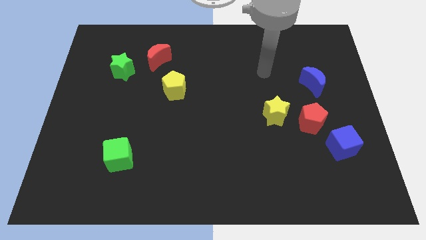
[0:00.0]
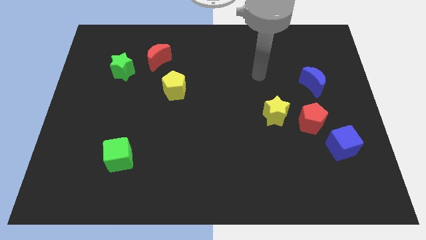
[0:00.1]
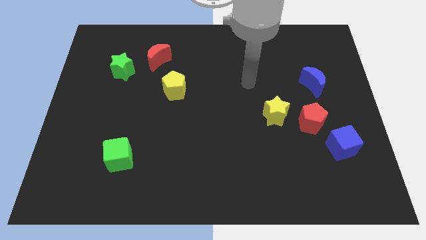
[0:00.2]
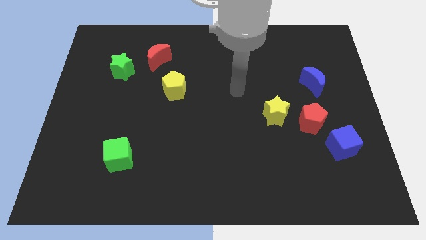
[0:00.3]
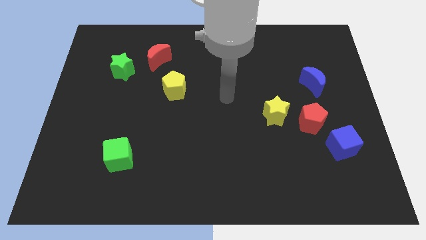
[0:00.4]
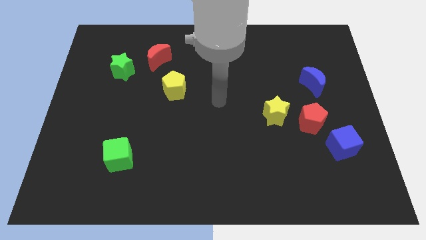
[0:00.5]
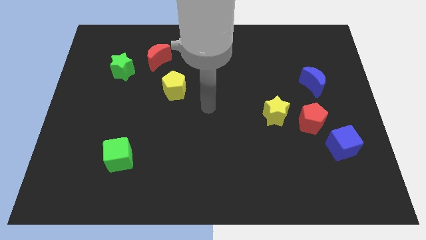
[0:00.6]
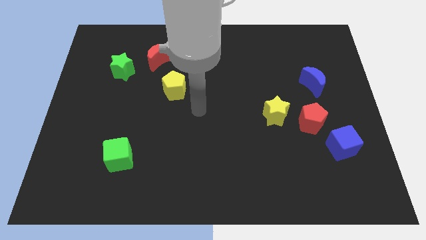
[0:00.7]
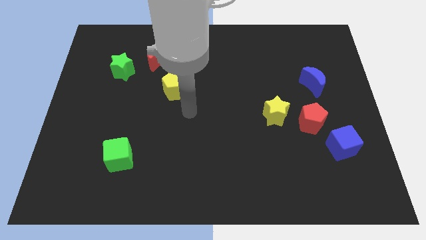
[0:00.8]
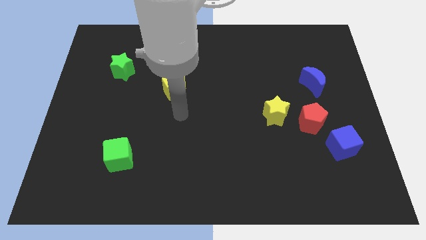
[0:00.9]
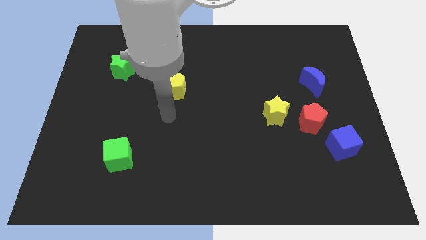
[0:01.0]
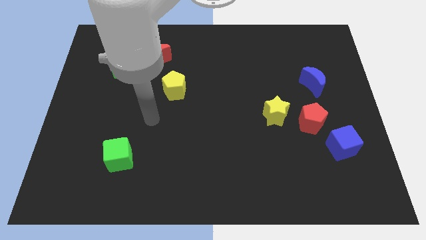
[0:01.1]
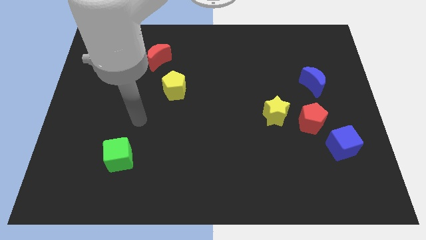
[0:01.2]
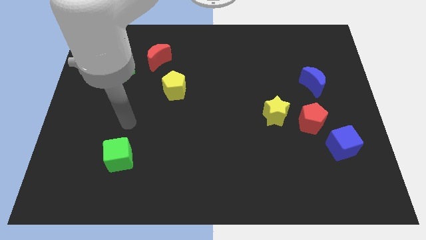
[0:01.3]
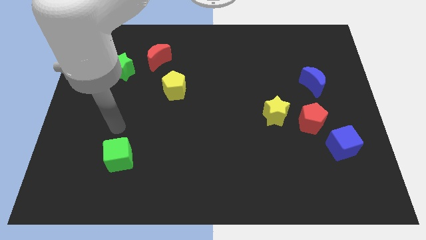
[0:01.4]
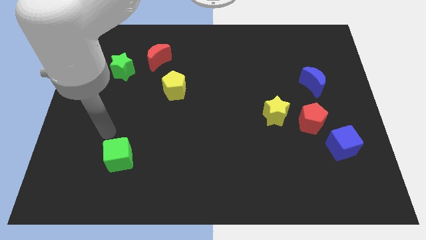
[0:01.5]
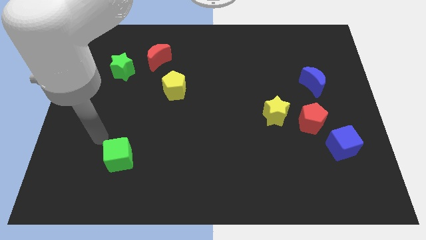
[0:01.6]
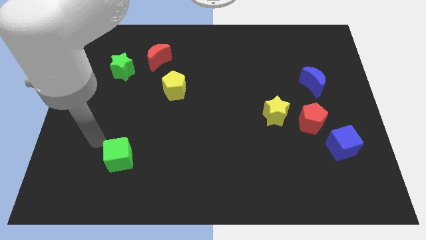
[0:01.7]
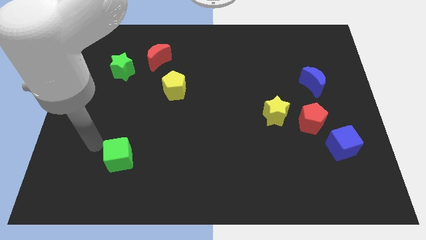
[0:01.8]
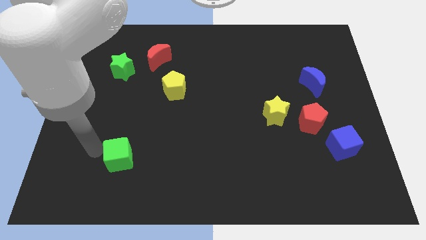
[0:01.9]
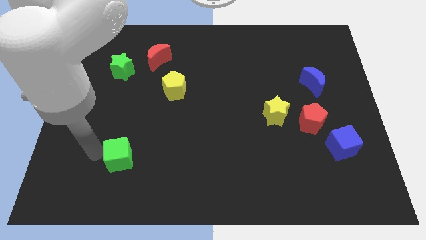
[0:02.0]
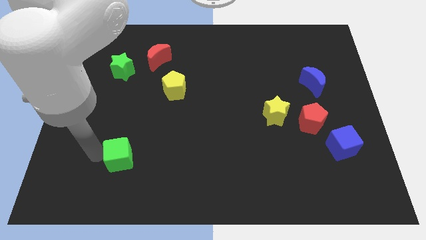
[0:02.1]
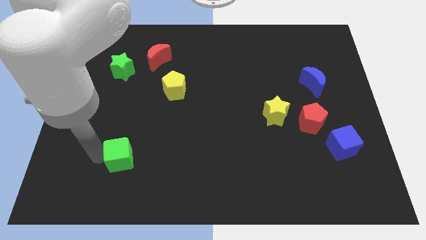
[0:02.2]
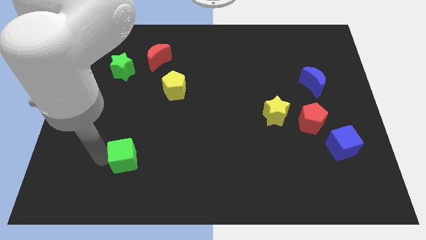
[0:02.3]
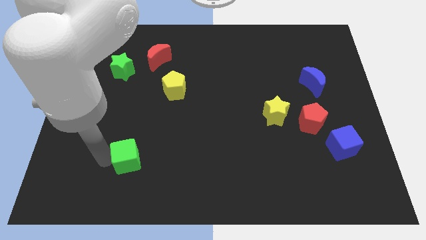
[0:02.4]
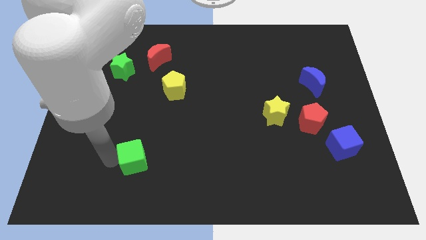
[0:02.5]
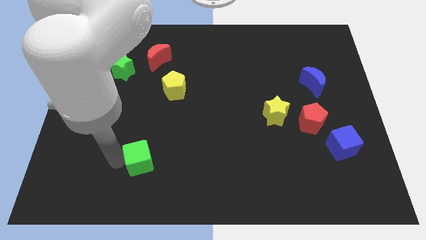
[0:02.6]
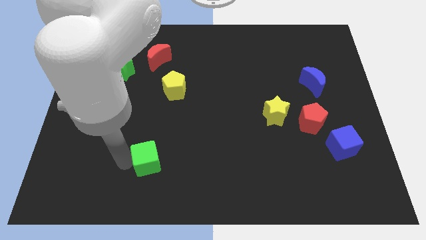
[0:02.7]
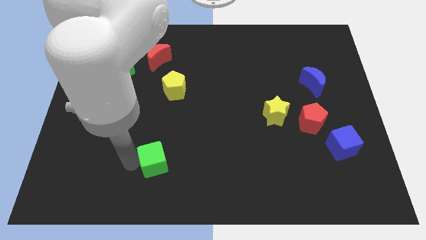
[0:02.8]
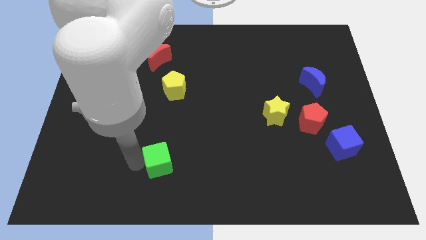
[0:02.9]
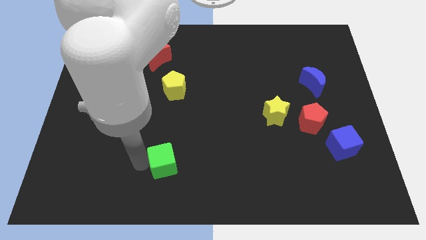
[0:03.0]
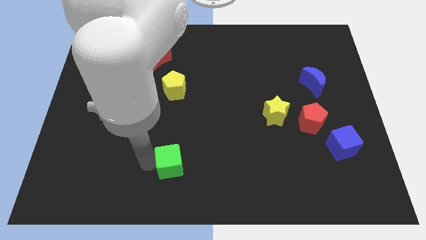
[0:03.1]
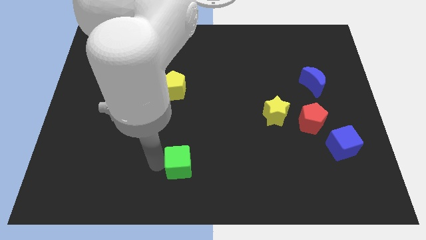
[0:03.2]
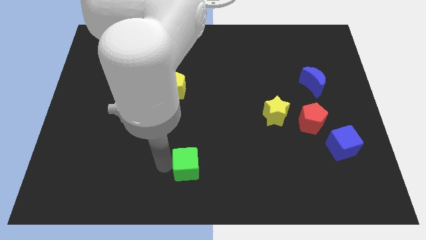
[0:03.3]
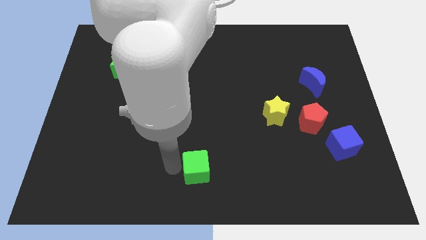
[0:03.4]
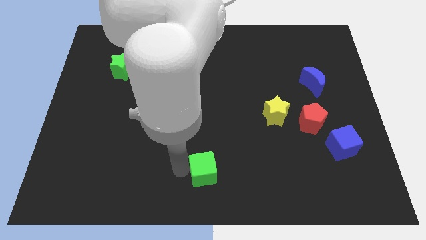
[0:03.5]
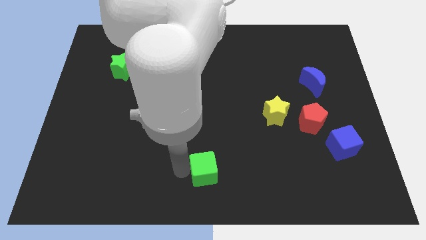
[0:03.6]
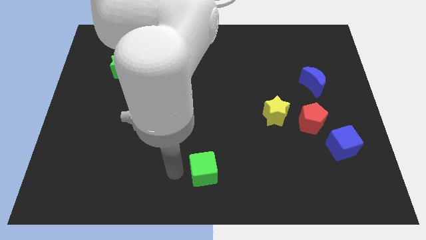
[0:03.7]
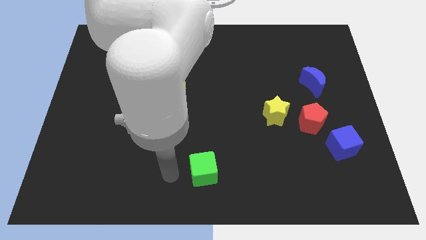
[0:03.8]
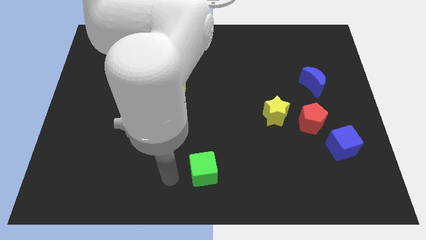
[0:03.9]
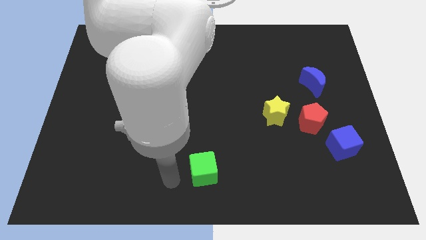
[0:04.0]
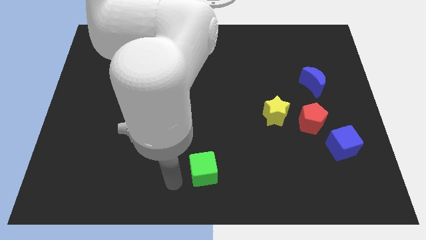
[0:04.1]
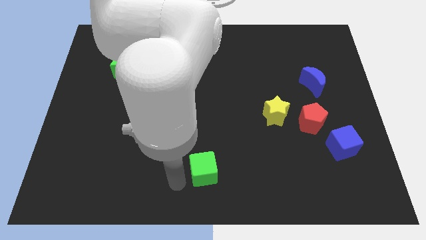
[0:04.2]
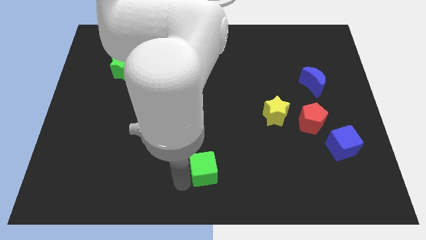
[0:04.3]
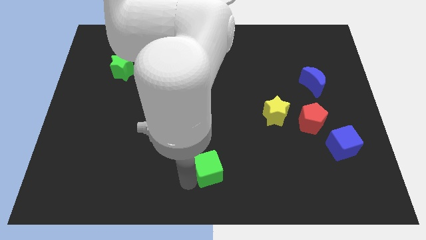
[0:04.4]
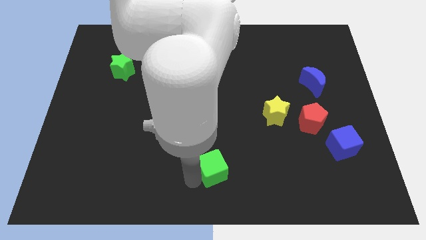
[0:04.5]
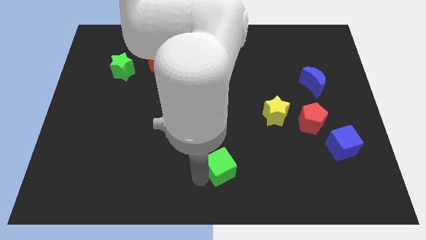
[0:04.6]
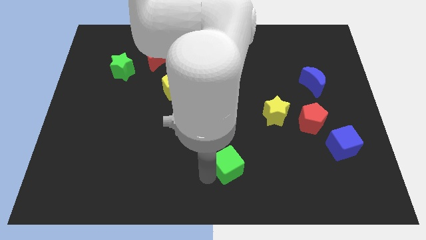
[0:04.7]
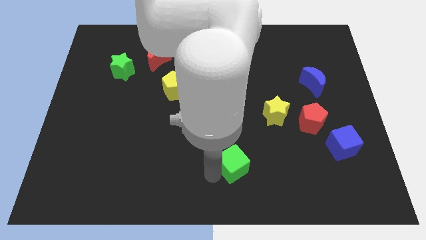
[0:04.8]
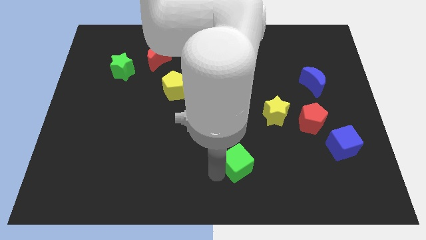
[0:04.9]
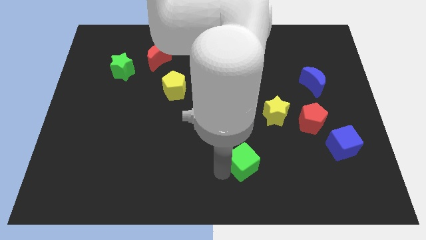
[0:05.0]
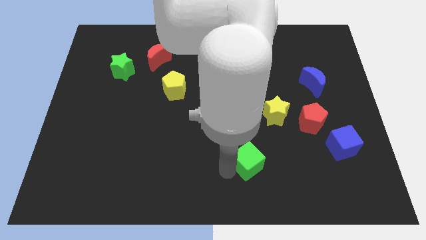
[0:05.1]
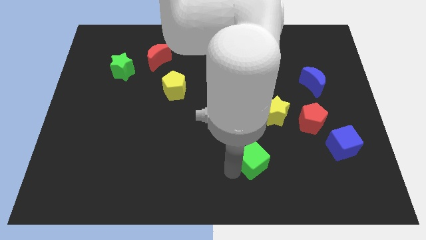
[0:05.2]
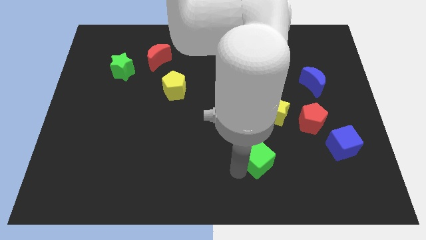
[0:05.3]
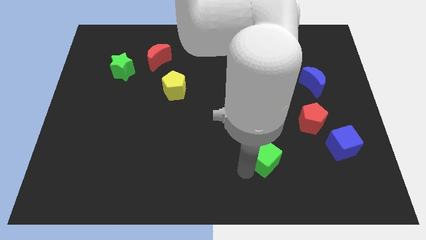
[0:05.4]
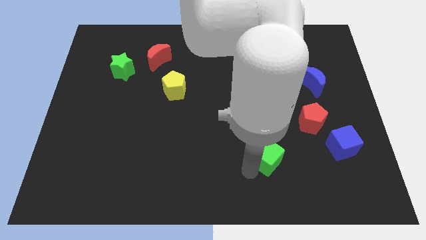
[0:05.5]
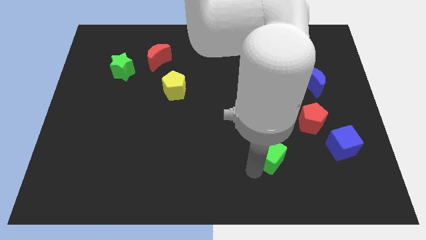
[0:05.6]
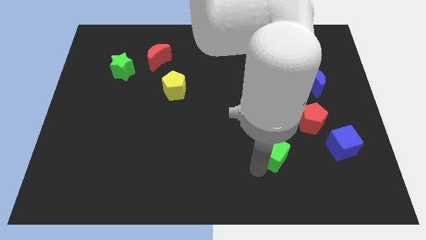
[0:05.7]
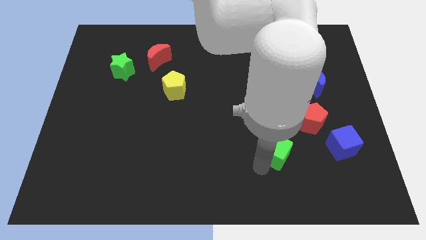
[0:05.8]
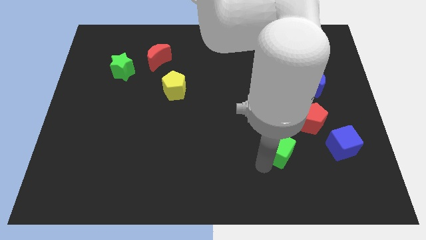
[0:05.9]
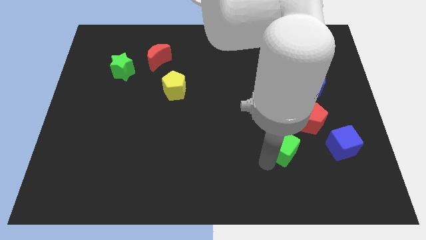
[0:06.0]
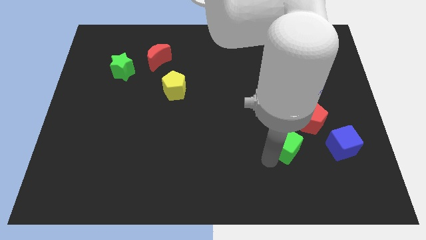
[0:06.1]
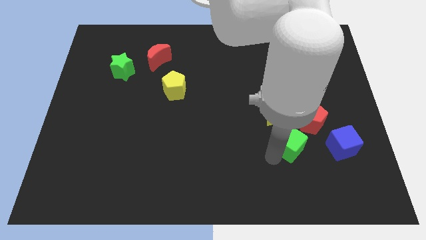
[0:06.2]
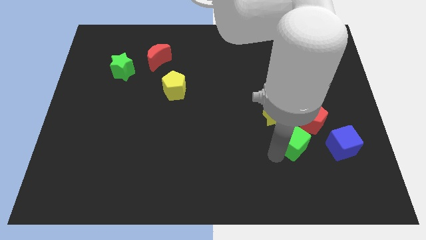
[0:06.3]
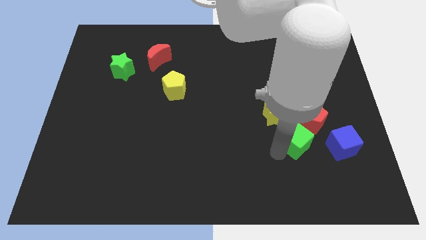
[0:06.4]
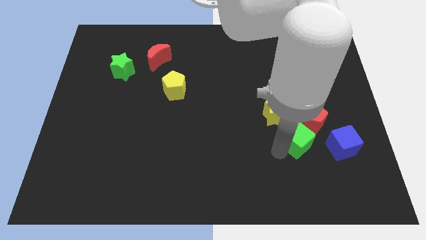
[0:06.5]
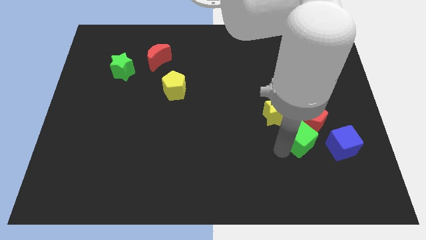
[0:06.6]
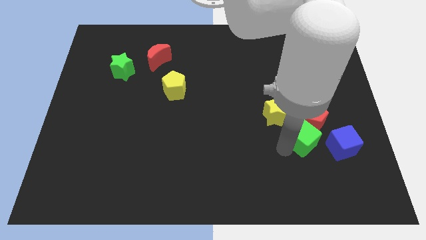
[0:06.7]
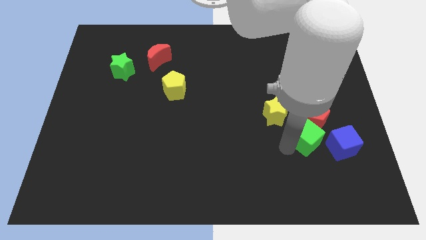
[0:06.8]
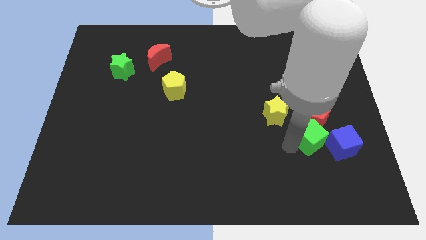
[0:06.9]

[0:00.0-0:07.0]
move the green cube towards the red pentagon

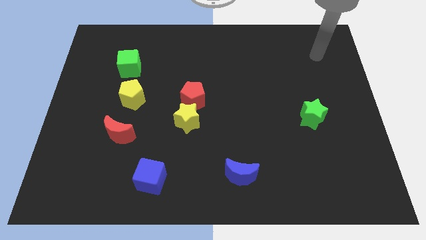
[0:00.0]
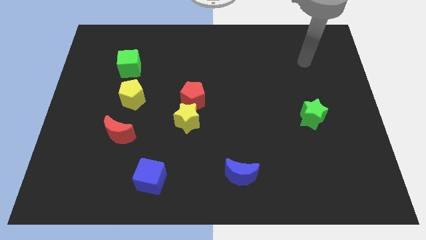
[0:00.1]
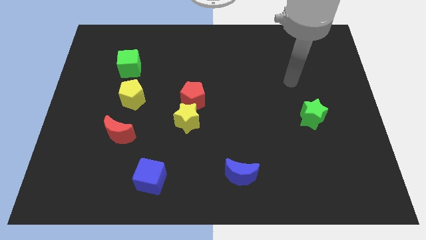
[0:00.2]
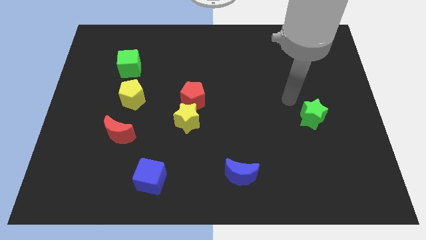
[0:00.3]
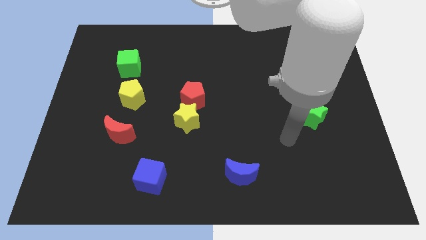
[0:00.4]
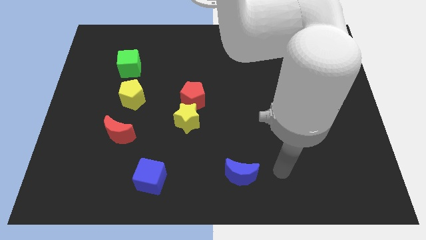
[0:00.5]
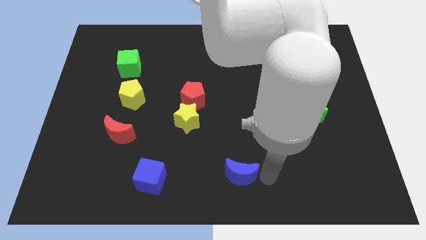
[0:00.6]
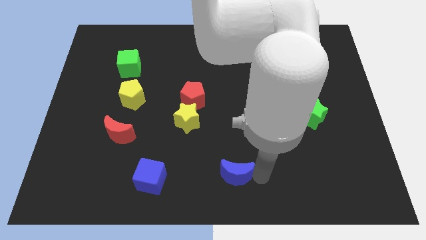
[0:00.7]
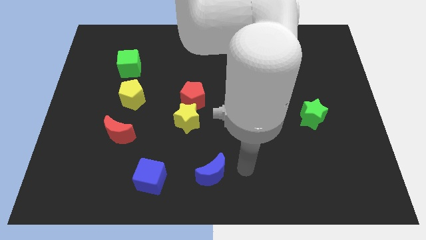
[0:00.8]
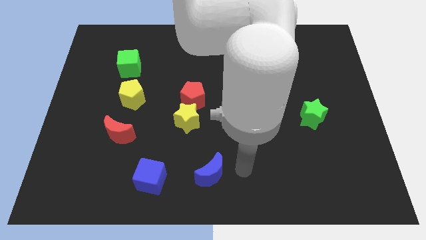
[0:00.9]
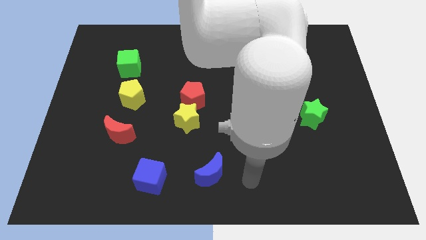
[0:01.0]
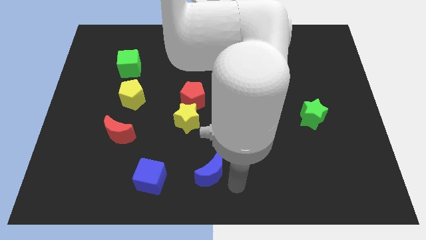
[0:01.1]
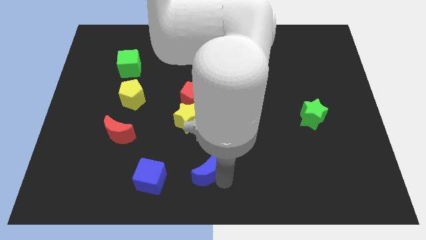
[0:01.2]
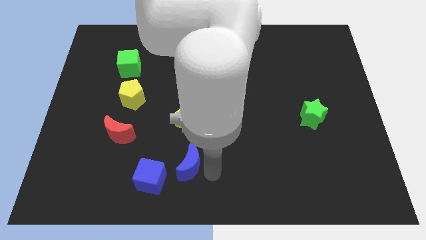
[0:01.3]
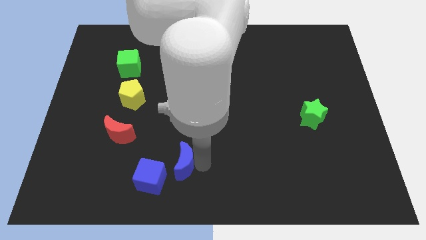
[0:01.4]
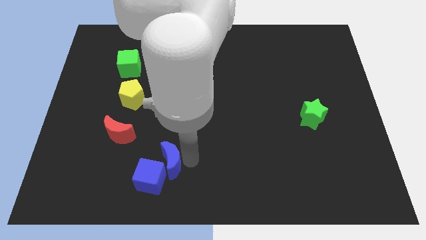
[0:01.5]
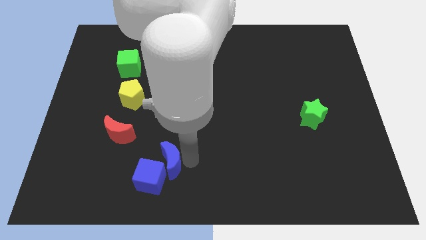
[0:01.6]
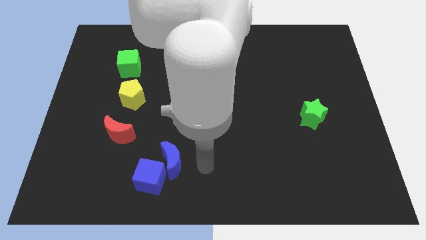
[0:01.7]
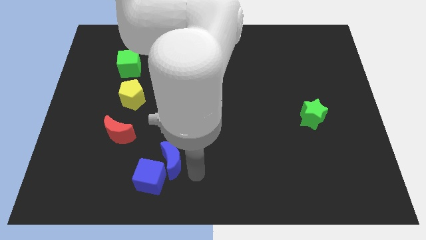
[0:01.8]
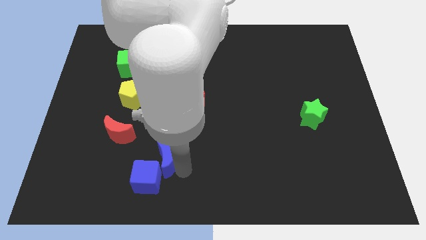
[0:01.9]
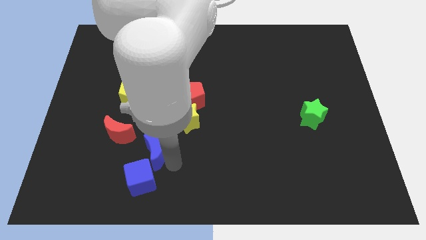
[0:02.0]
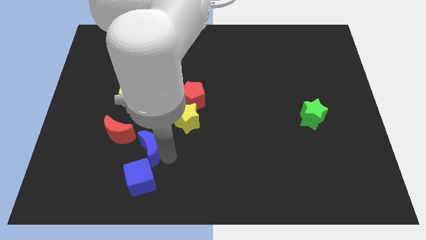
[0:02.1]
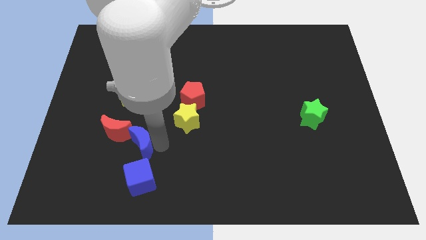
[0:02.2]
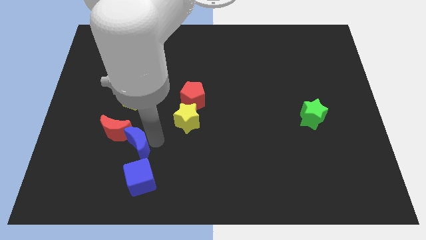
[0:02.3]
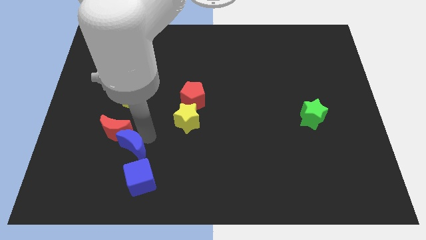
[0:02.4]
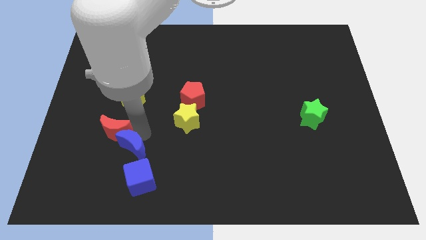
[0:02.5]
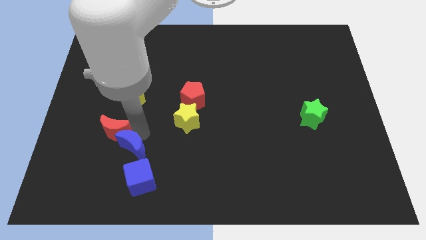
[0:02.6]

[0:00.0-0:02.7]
put the blue moon to the red moon
